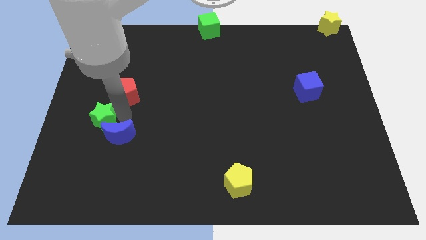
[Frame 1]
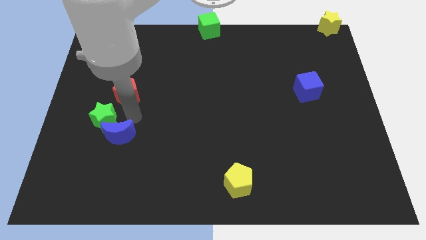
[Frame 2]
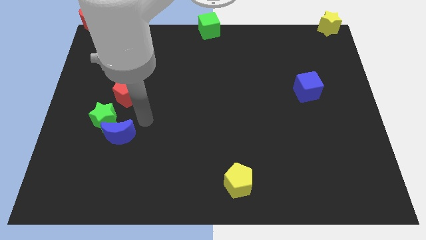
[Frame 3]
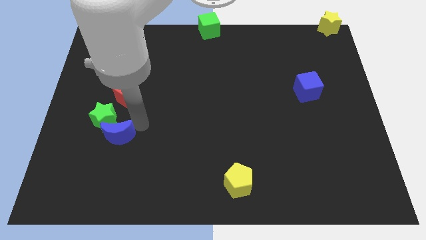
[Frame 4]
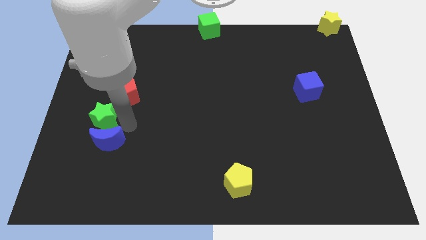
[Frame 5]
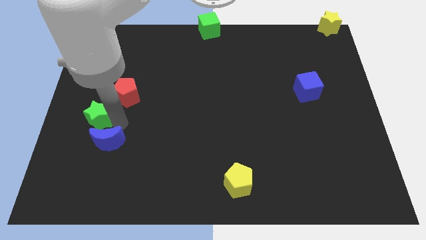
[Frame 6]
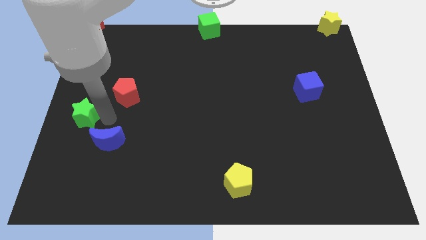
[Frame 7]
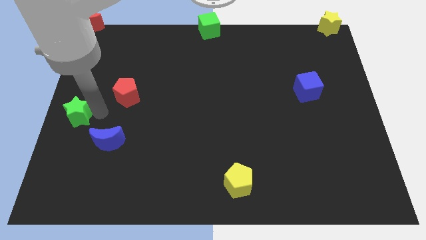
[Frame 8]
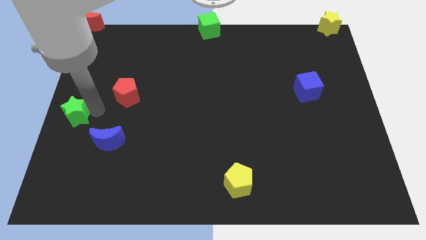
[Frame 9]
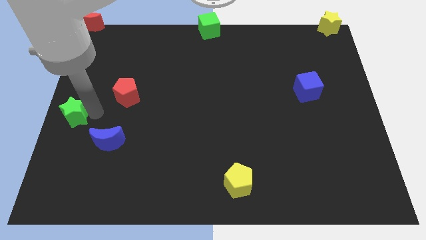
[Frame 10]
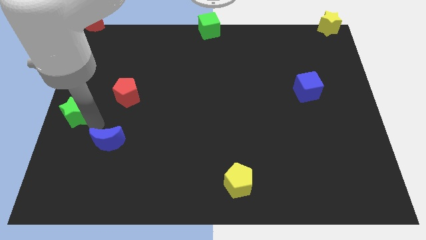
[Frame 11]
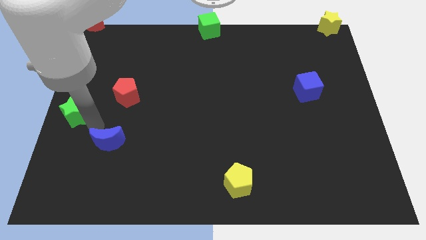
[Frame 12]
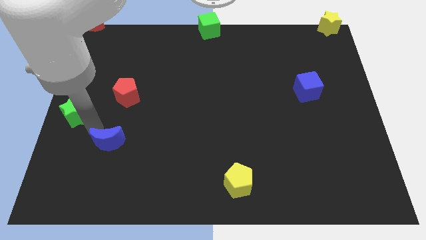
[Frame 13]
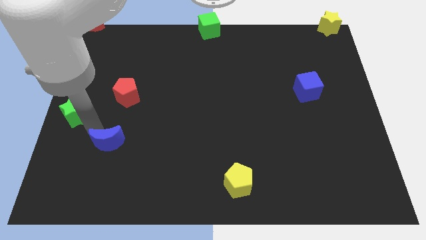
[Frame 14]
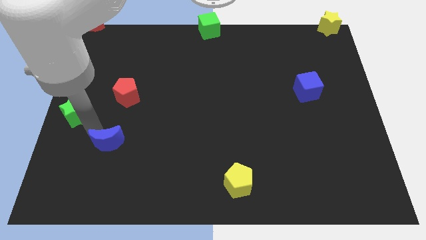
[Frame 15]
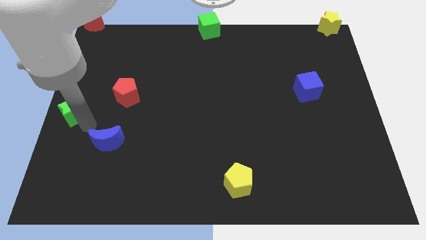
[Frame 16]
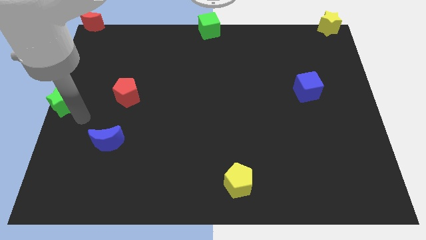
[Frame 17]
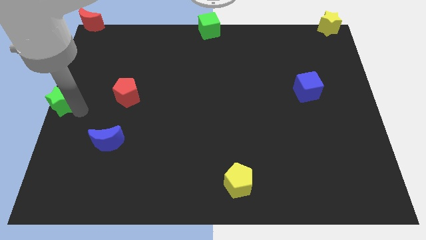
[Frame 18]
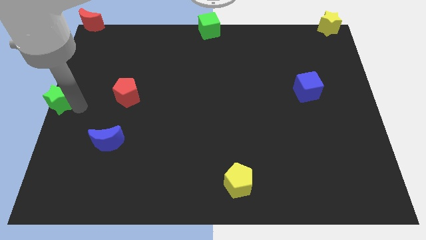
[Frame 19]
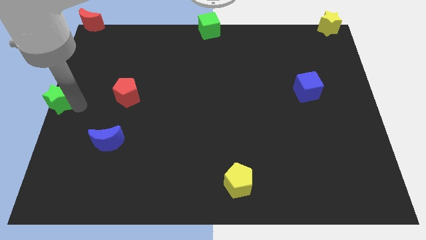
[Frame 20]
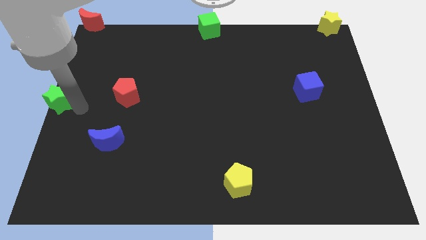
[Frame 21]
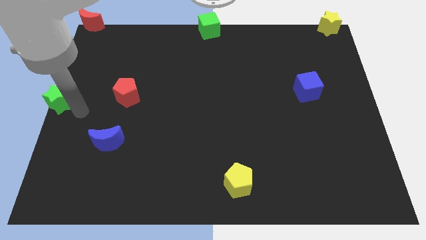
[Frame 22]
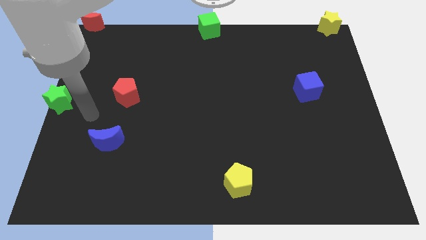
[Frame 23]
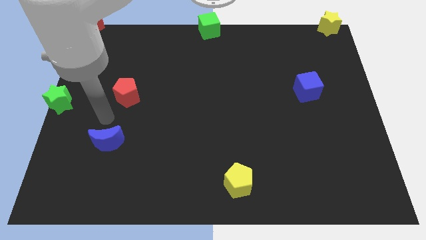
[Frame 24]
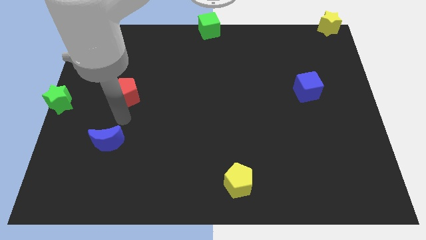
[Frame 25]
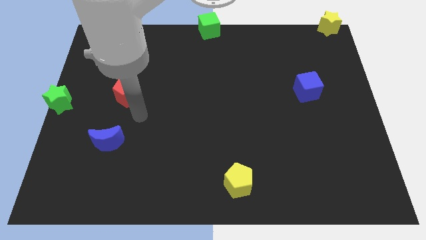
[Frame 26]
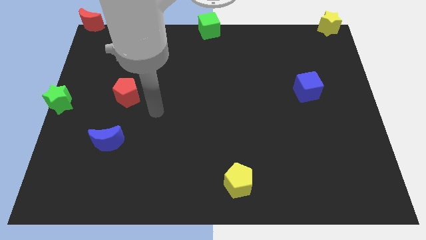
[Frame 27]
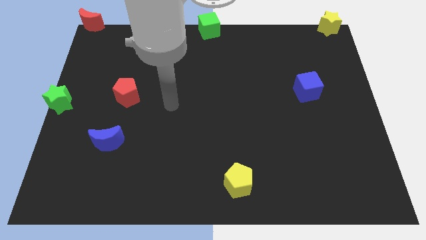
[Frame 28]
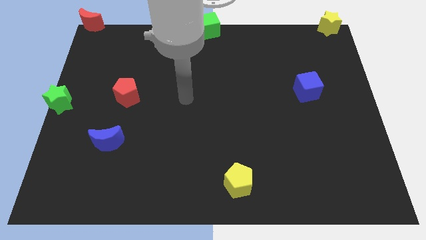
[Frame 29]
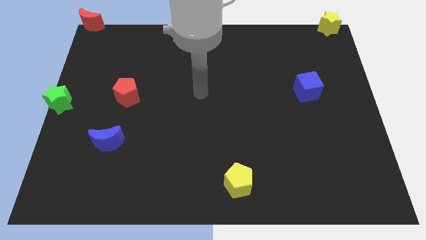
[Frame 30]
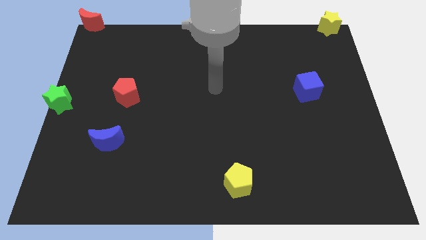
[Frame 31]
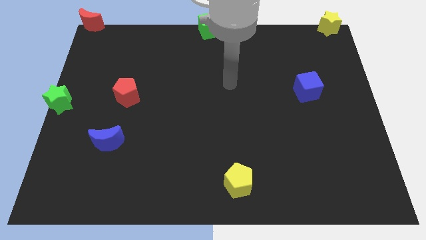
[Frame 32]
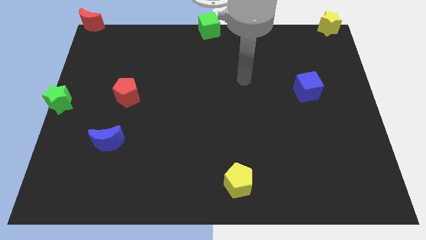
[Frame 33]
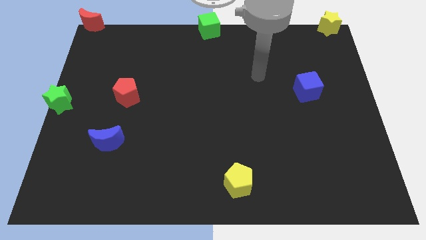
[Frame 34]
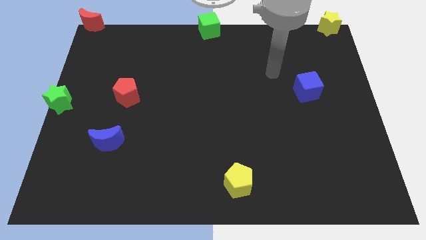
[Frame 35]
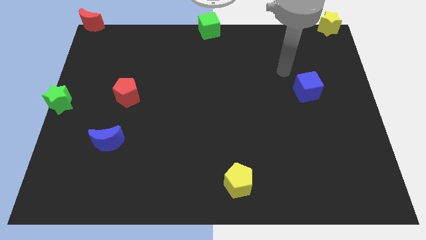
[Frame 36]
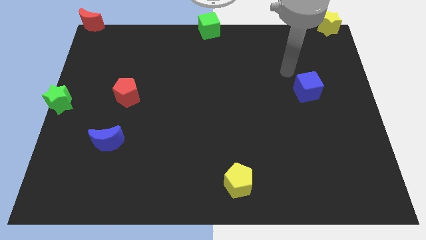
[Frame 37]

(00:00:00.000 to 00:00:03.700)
move the green star to the left center of the board

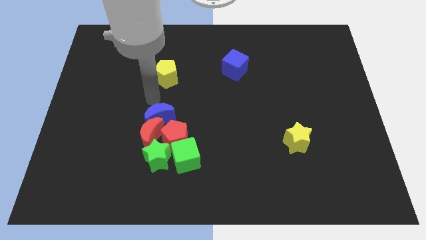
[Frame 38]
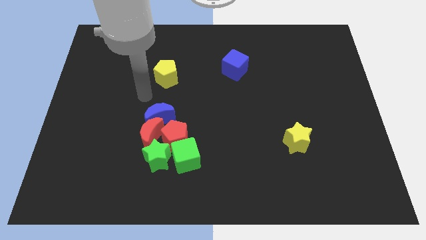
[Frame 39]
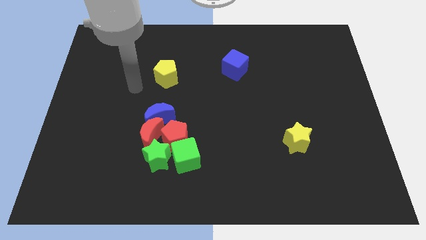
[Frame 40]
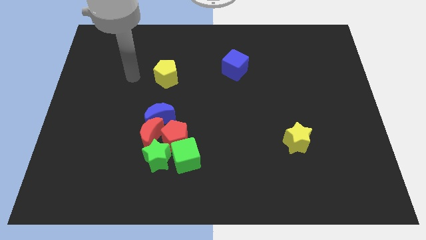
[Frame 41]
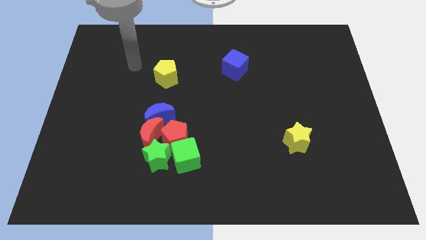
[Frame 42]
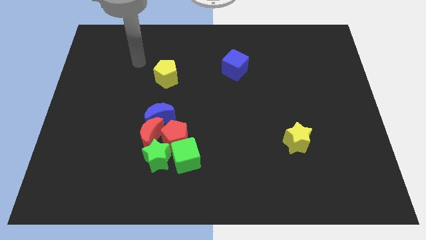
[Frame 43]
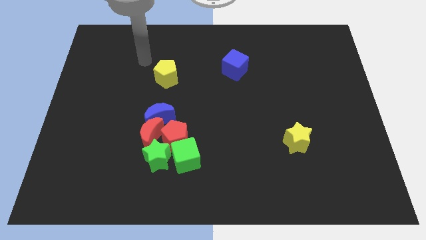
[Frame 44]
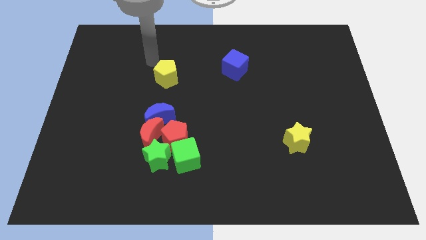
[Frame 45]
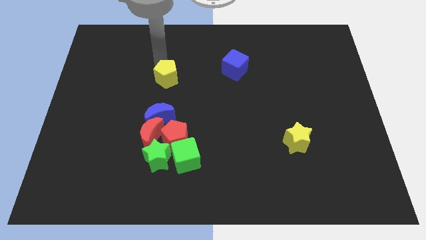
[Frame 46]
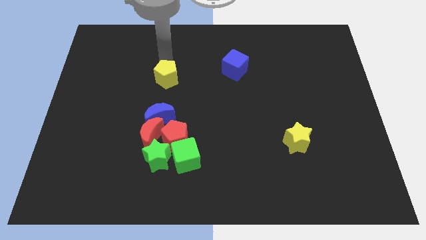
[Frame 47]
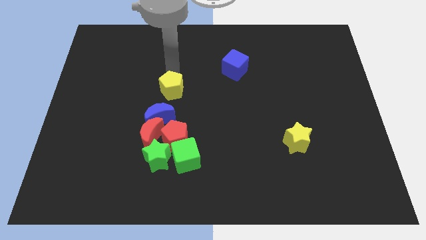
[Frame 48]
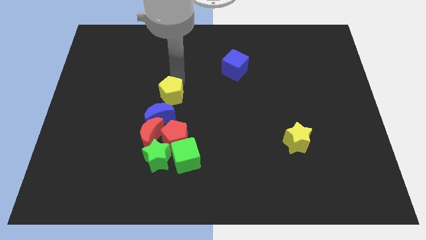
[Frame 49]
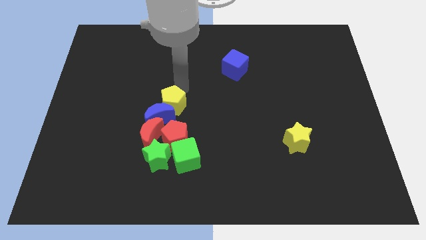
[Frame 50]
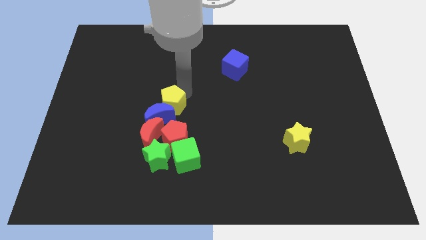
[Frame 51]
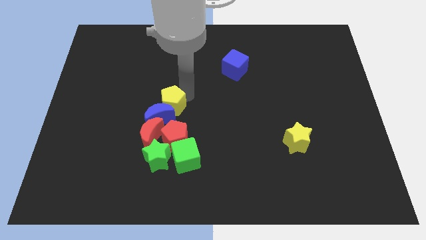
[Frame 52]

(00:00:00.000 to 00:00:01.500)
move the yellow pentagon close to the blue moon

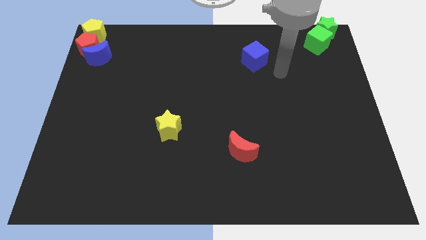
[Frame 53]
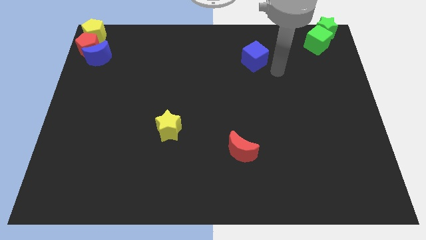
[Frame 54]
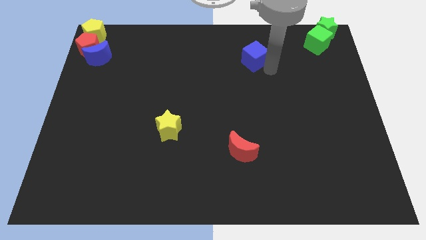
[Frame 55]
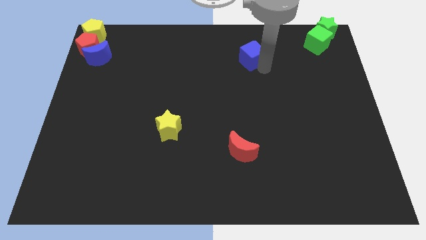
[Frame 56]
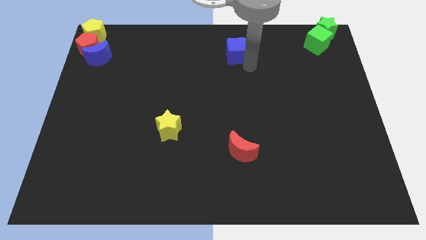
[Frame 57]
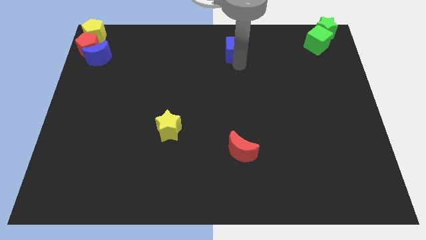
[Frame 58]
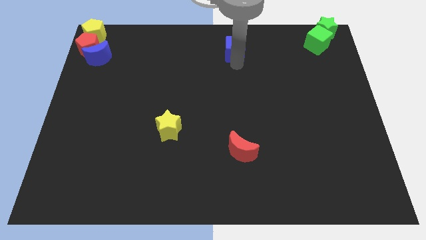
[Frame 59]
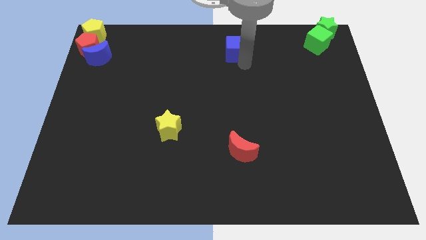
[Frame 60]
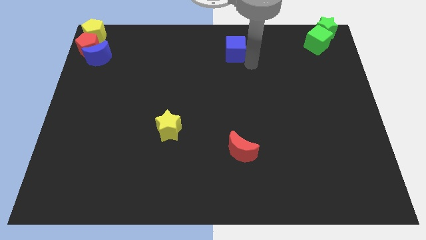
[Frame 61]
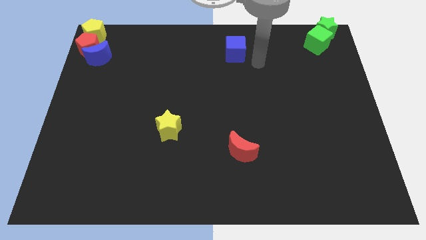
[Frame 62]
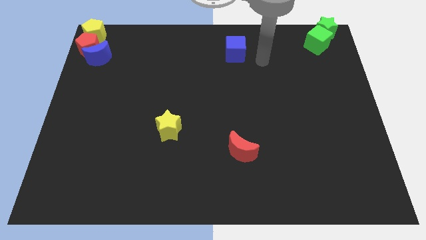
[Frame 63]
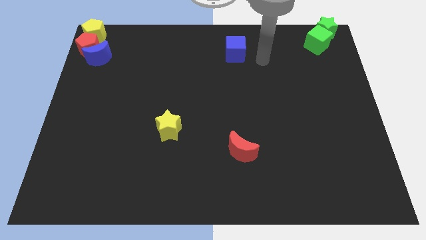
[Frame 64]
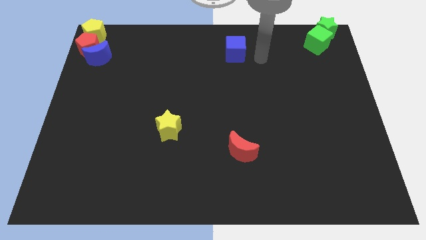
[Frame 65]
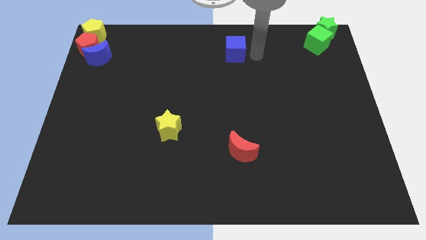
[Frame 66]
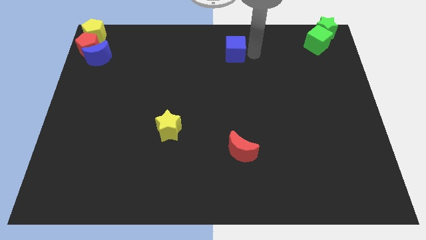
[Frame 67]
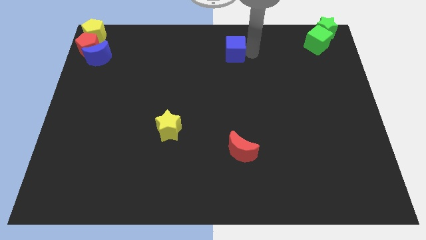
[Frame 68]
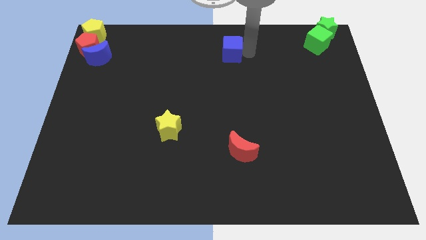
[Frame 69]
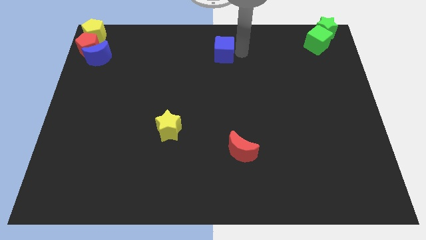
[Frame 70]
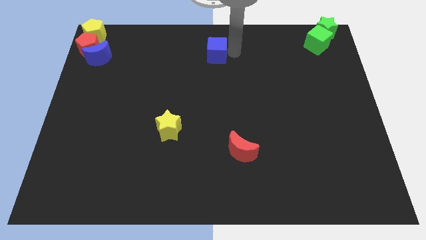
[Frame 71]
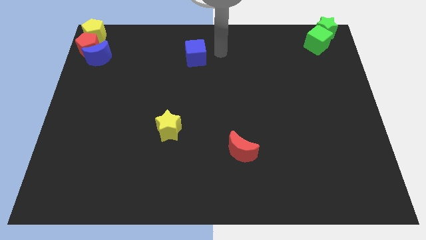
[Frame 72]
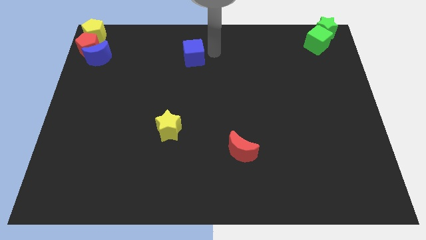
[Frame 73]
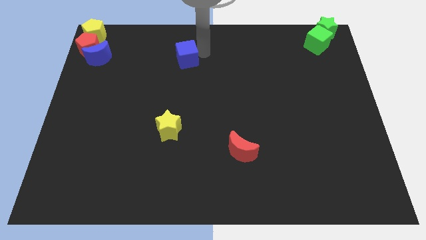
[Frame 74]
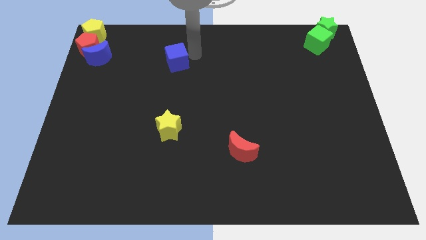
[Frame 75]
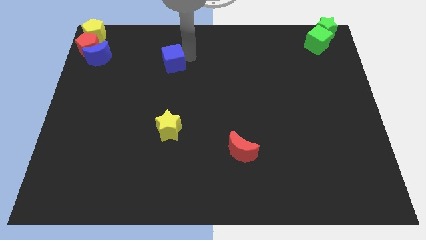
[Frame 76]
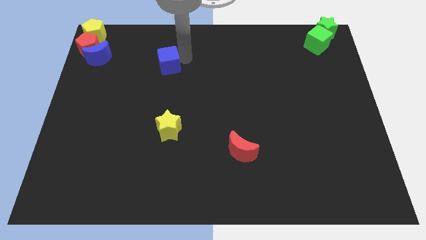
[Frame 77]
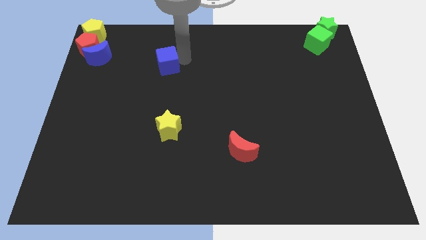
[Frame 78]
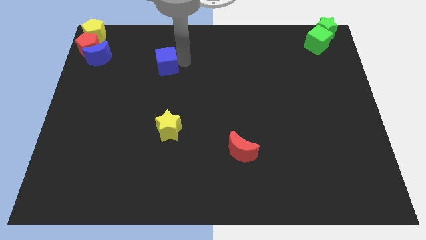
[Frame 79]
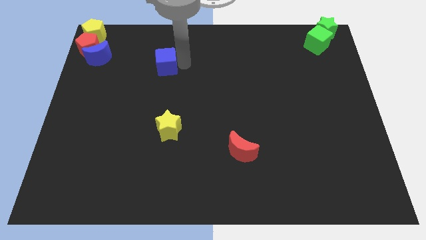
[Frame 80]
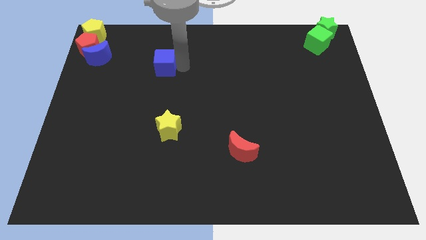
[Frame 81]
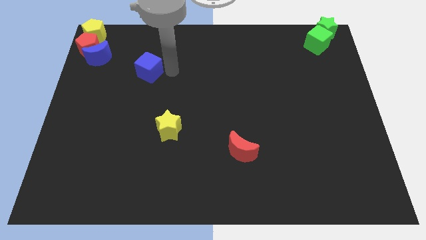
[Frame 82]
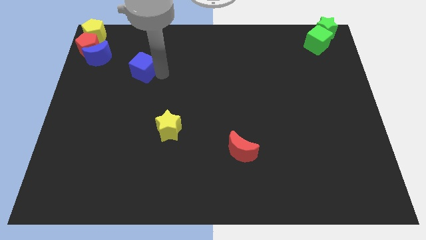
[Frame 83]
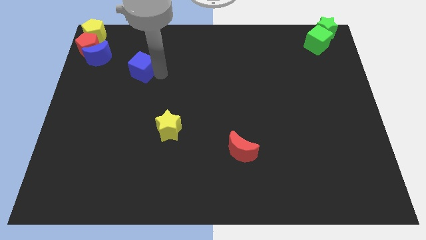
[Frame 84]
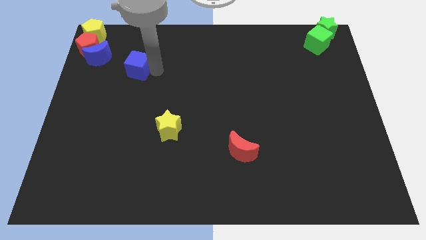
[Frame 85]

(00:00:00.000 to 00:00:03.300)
move the blue cube towards the group of blocks

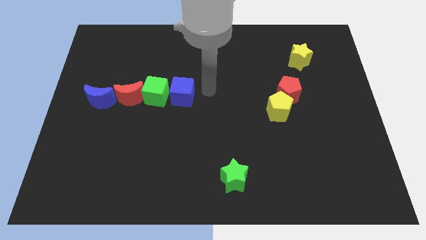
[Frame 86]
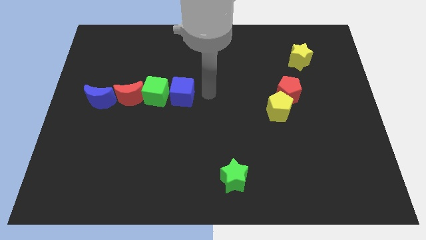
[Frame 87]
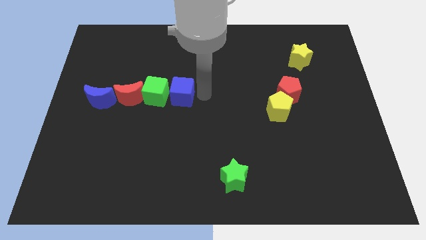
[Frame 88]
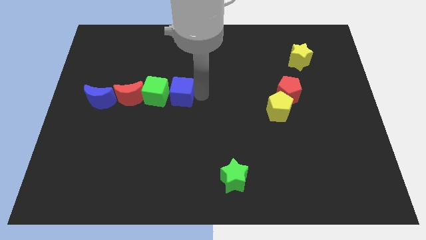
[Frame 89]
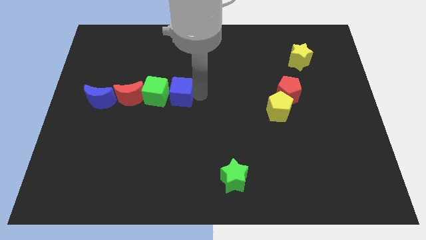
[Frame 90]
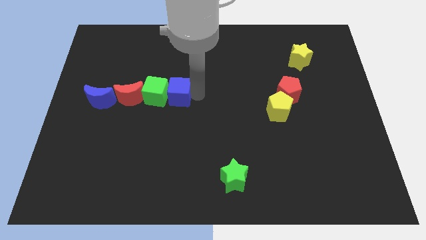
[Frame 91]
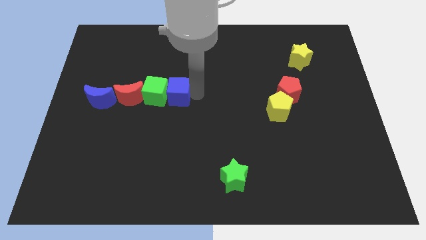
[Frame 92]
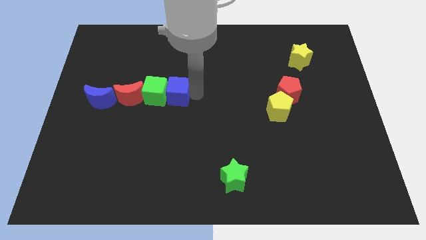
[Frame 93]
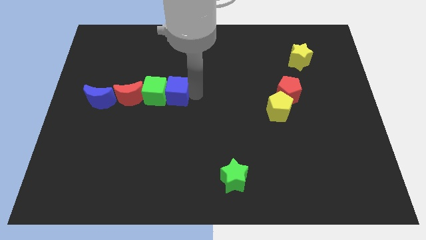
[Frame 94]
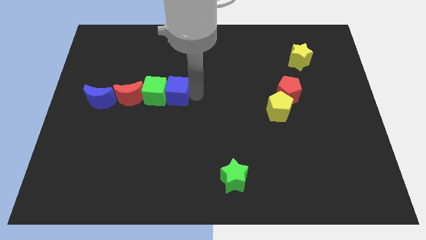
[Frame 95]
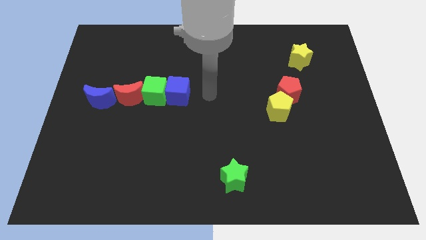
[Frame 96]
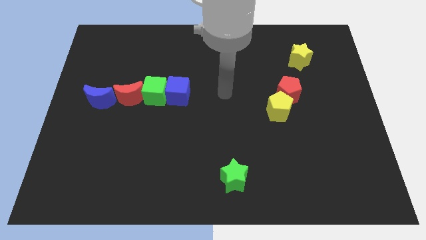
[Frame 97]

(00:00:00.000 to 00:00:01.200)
push the blue cube into the green cube
